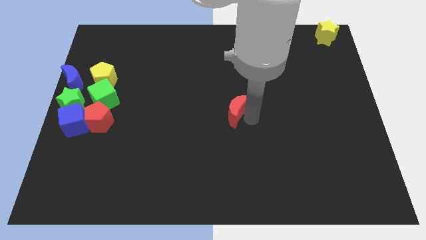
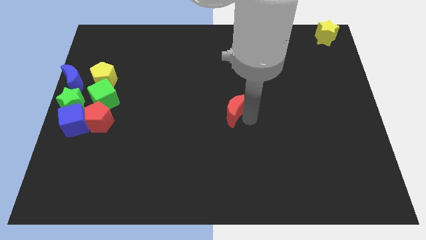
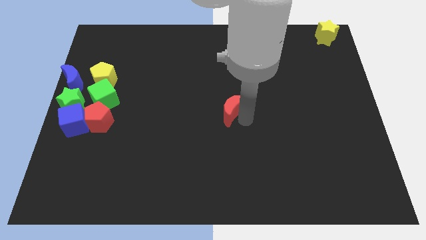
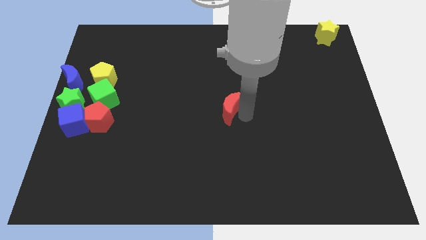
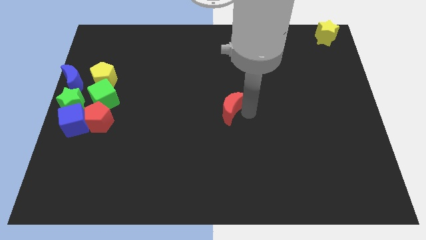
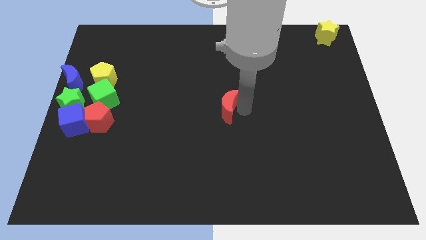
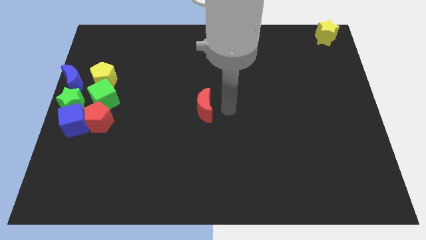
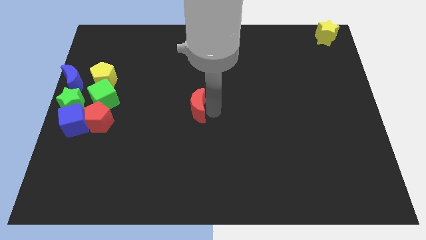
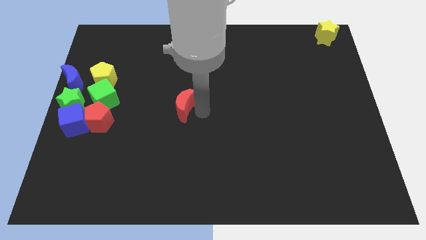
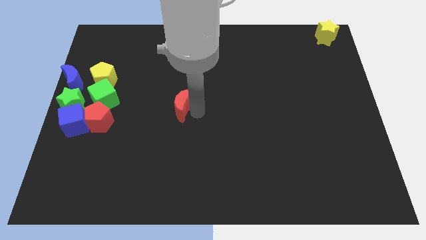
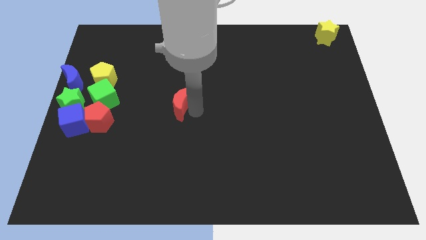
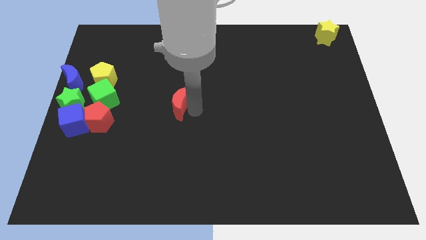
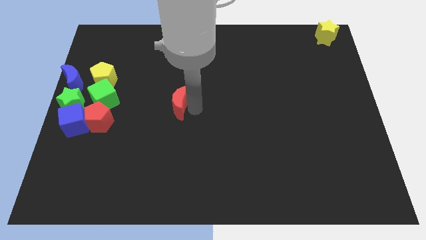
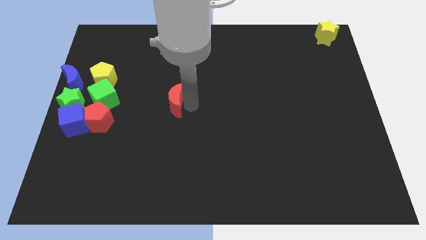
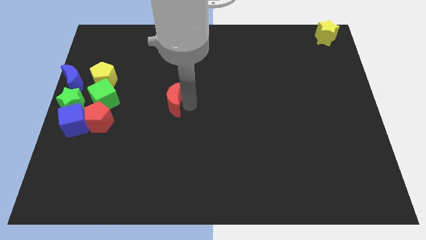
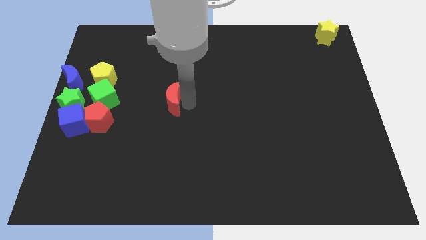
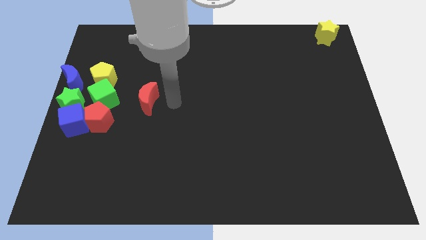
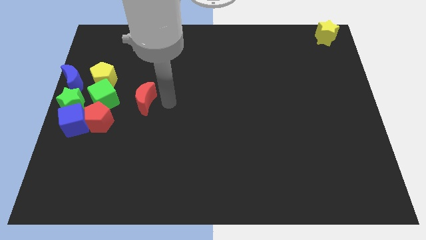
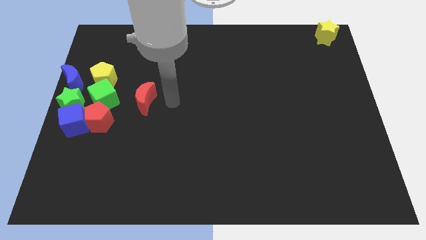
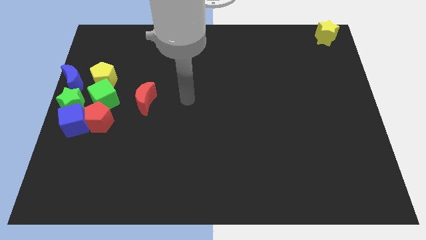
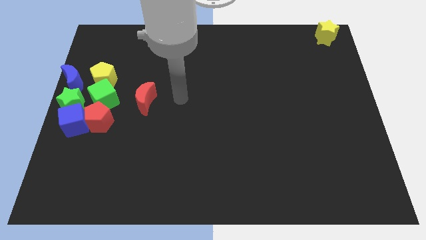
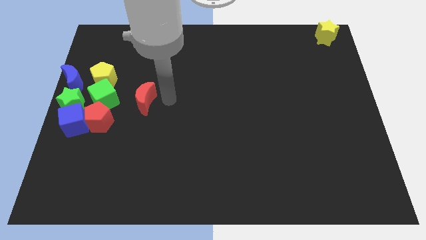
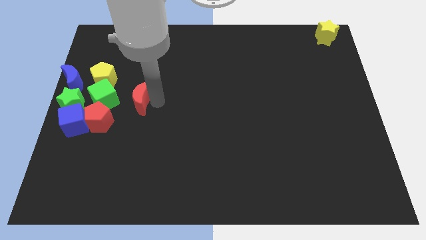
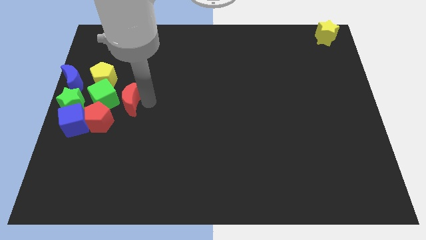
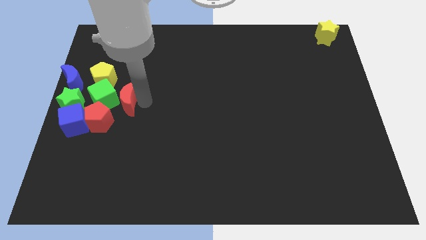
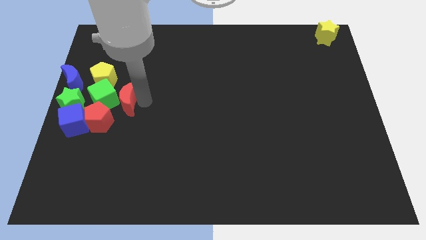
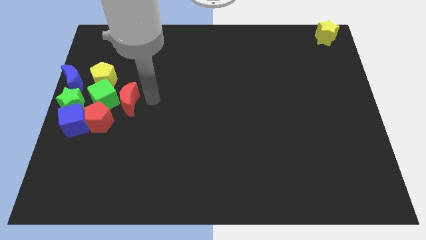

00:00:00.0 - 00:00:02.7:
push the red moon to the right of green cube

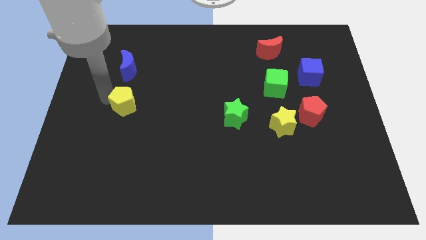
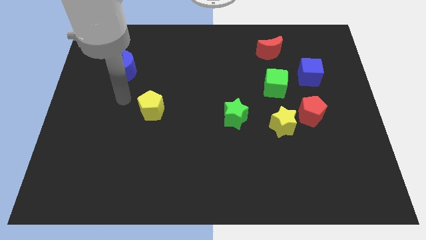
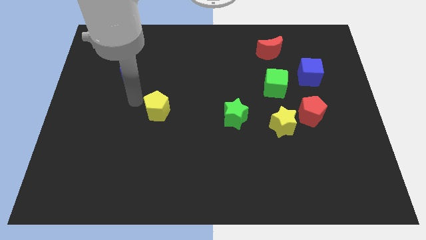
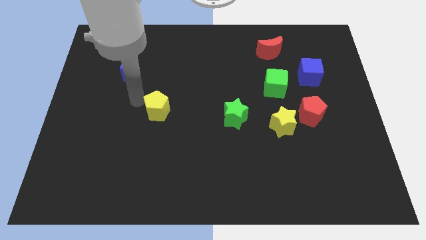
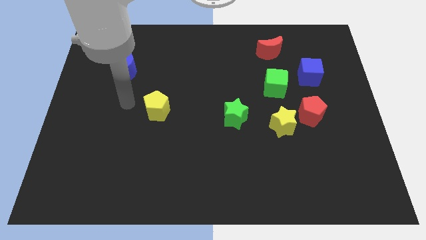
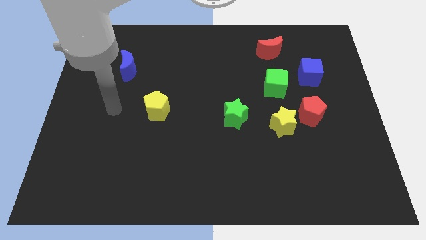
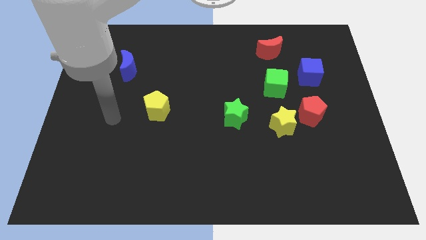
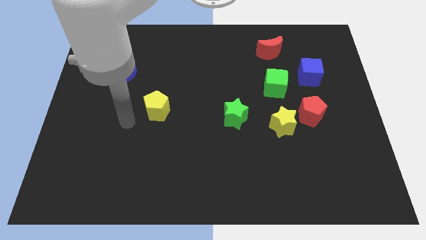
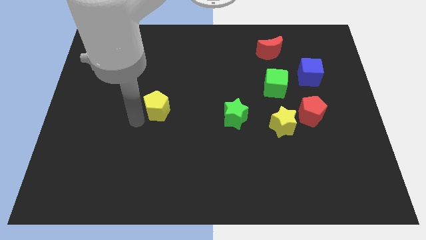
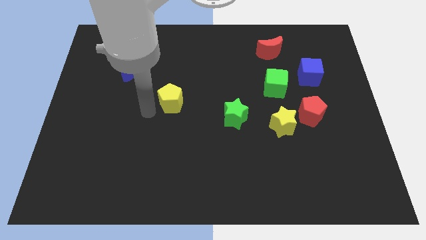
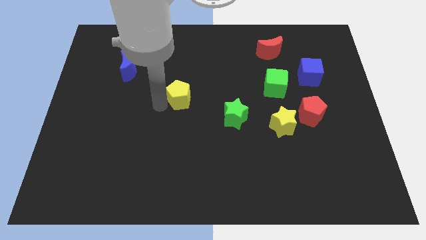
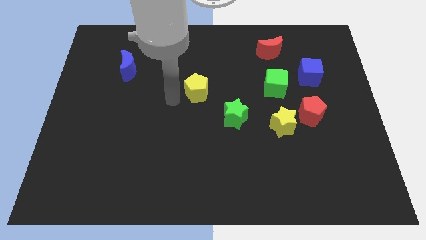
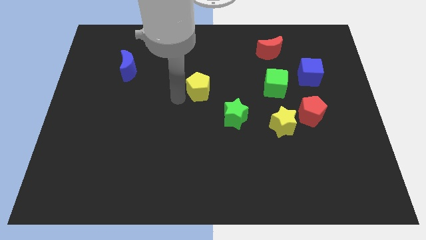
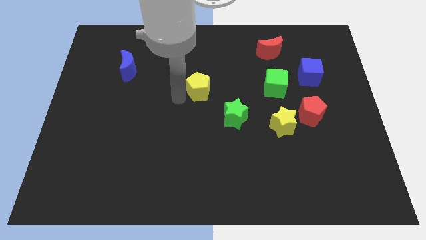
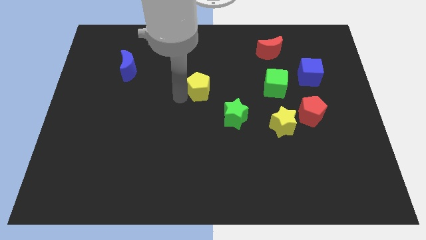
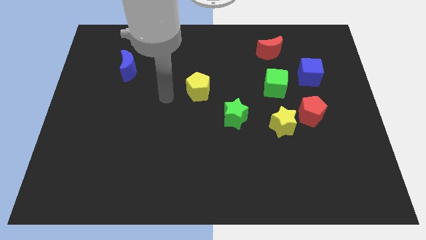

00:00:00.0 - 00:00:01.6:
push yellow pentagon towards right corner of the board

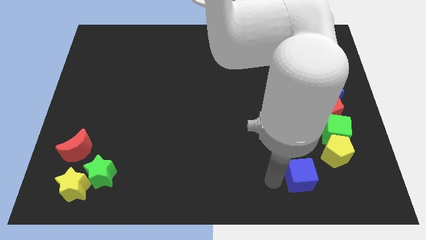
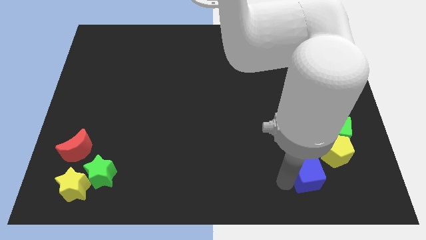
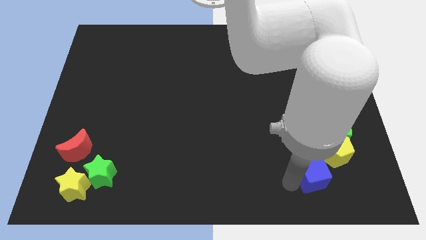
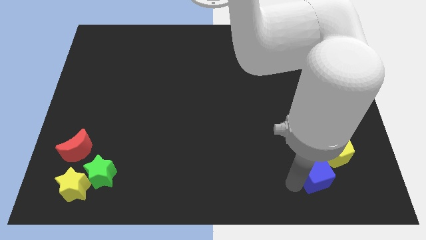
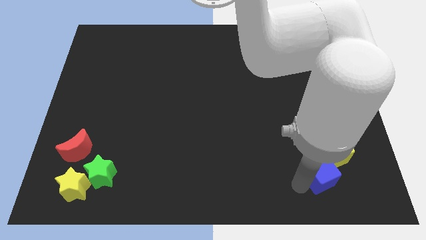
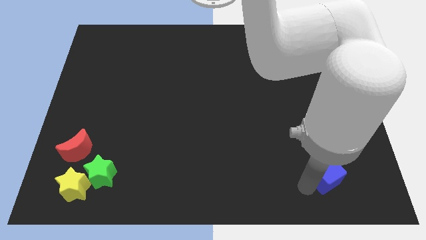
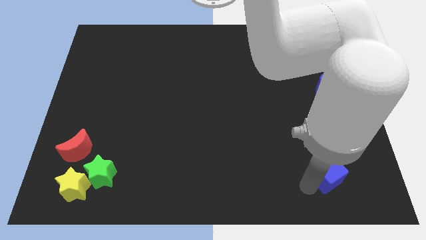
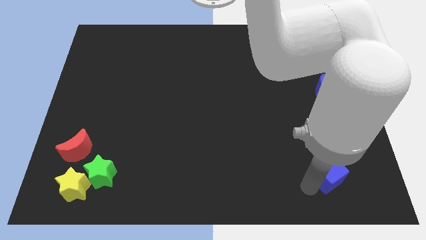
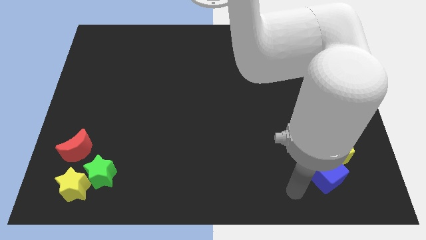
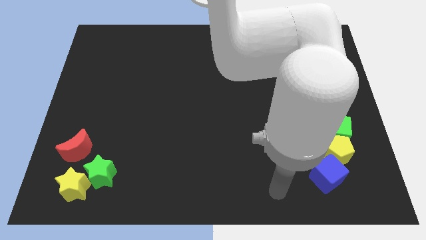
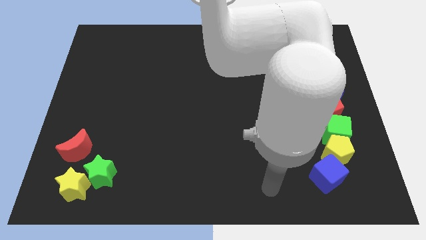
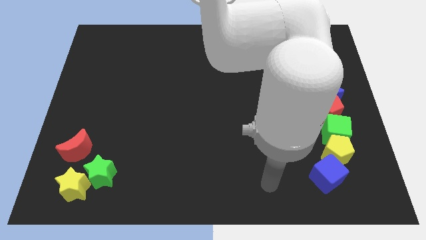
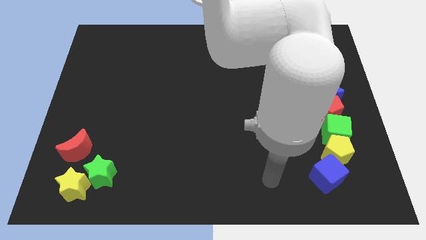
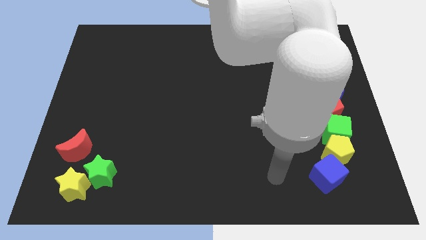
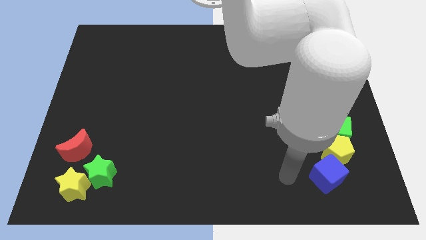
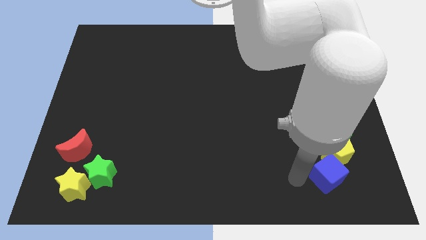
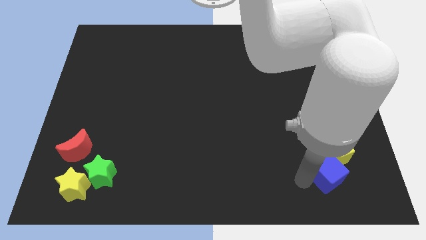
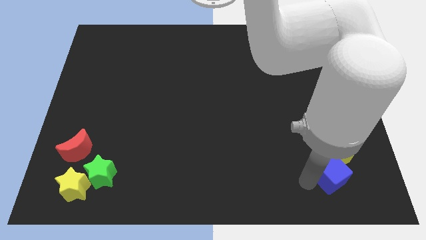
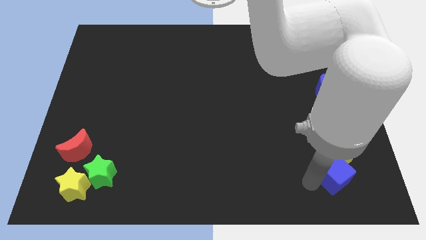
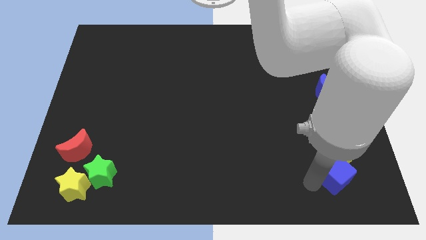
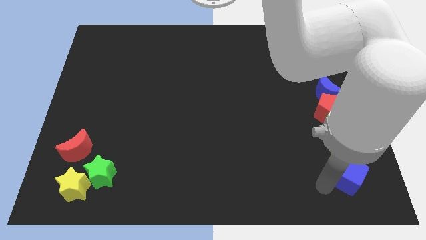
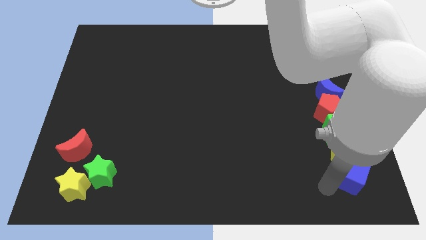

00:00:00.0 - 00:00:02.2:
place the blue cube at the bottom of the yellow pentagon

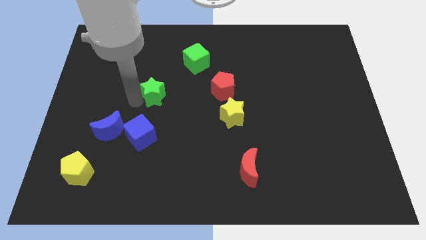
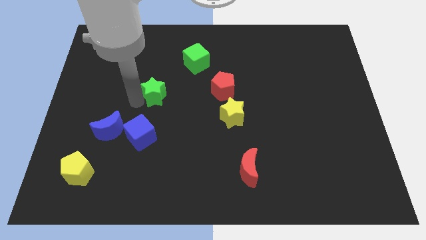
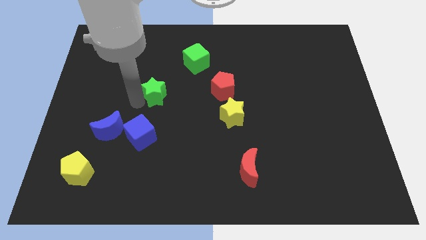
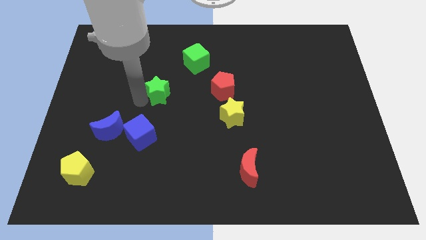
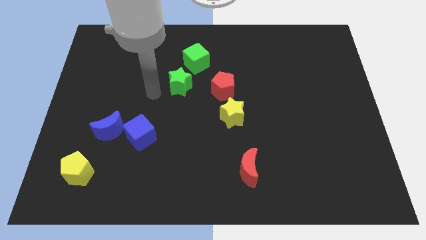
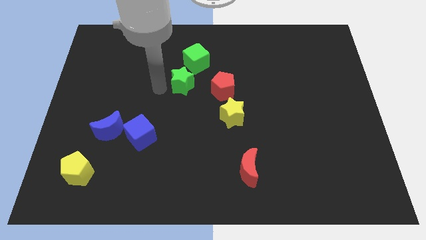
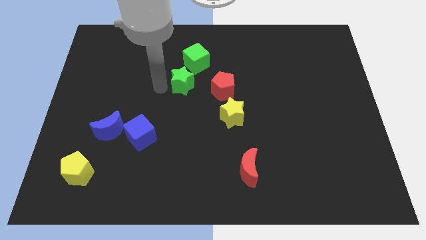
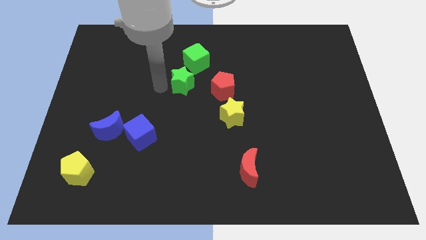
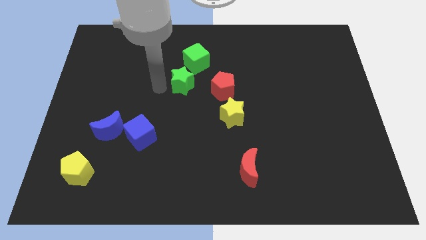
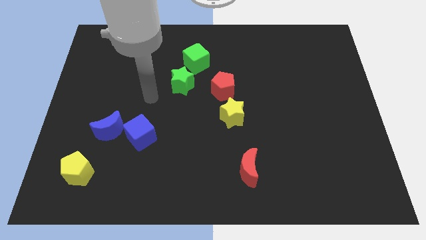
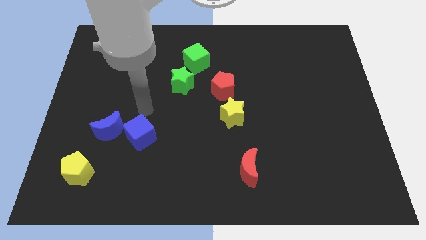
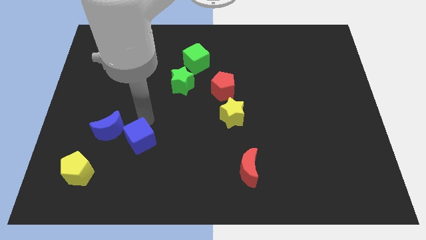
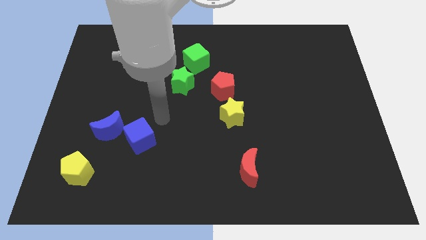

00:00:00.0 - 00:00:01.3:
move green star to the left of the red pentagon

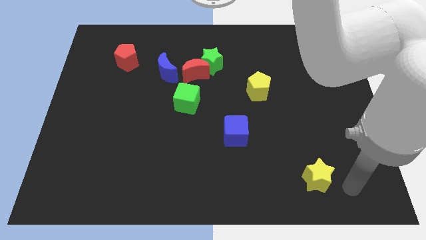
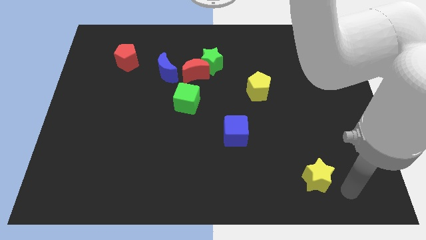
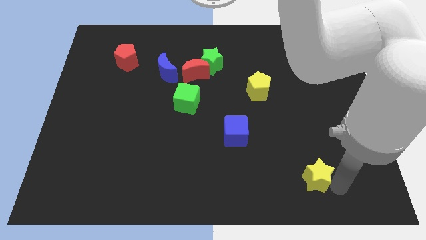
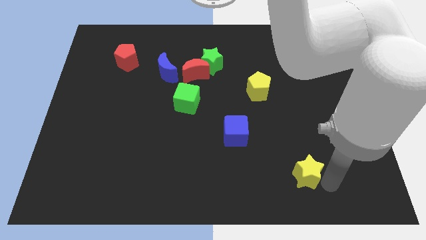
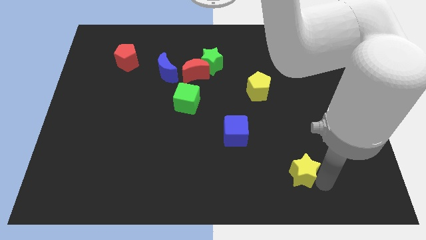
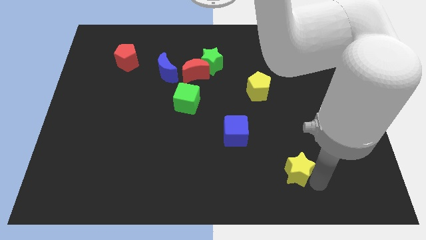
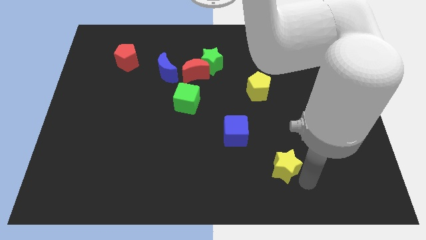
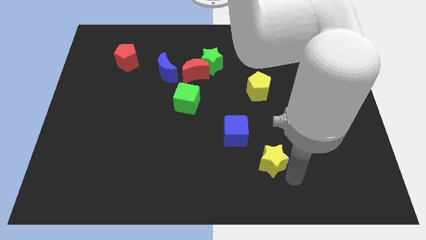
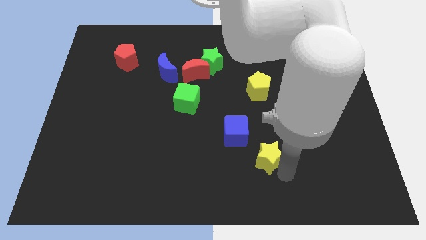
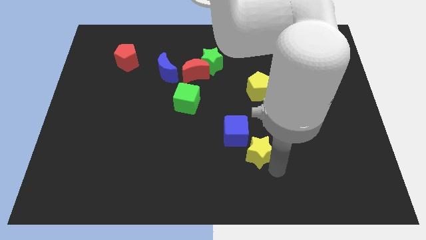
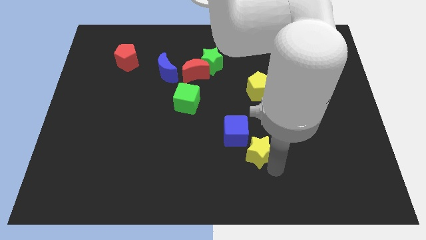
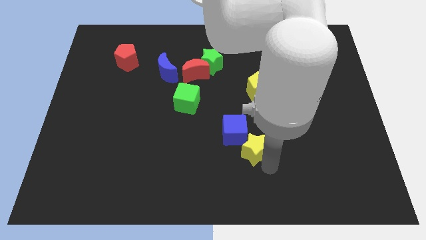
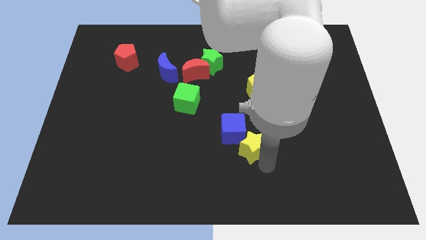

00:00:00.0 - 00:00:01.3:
push the yellow star close to the blue cube
